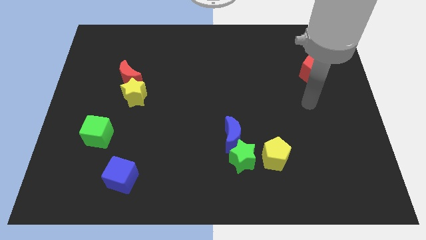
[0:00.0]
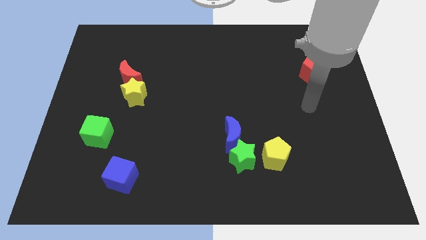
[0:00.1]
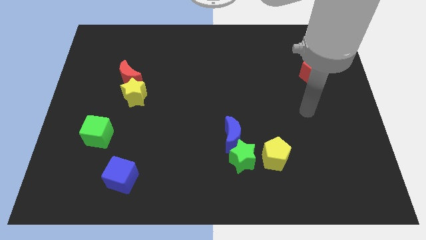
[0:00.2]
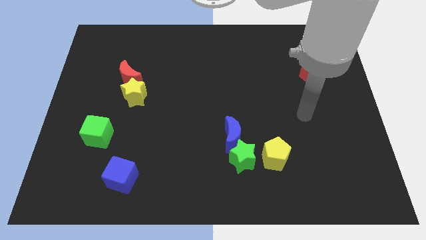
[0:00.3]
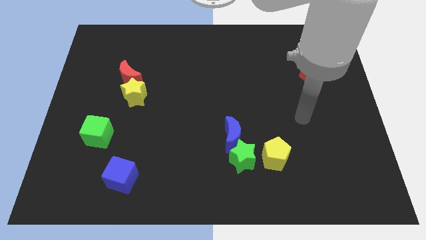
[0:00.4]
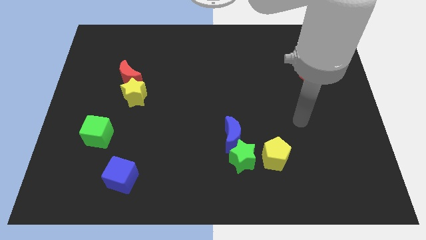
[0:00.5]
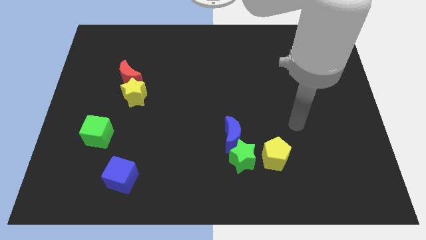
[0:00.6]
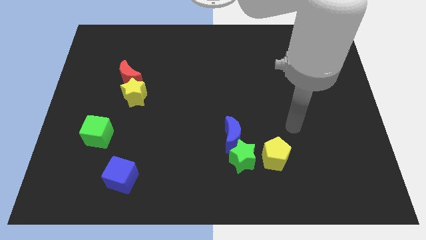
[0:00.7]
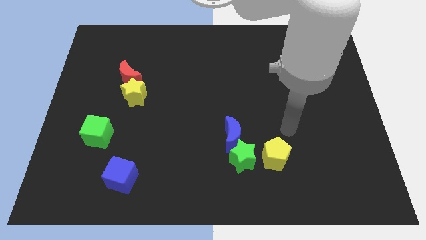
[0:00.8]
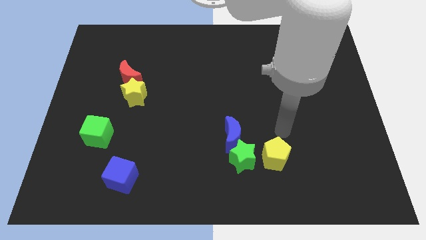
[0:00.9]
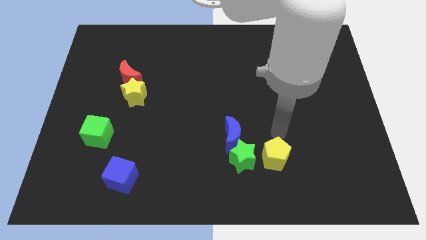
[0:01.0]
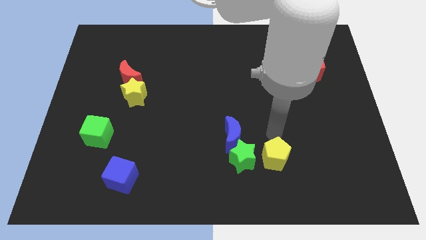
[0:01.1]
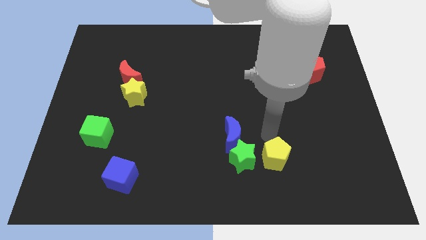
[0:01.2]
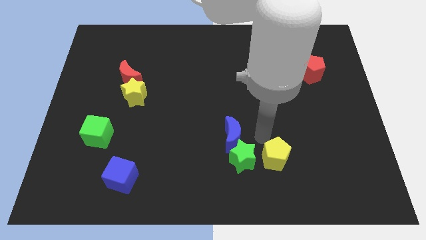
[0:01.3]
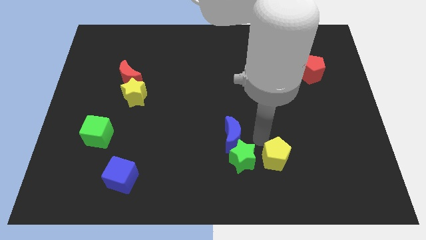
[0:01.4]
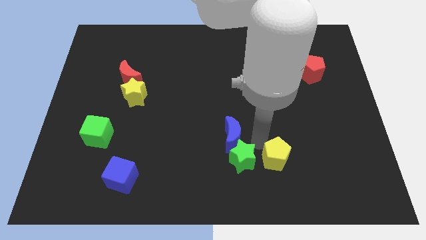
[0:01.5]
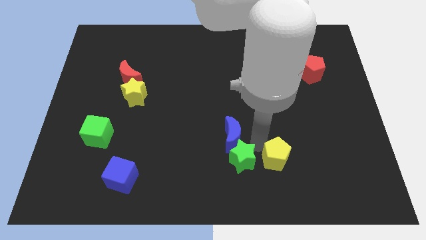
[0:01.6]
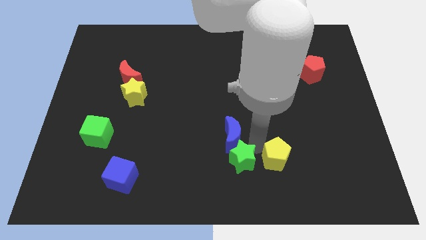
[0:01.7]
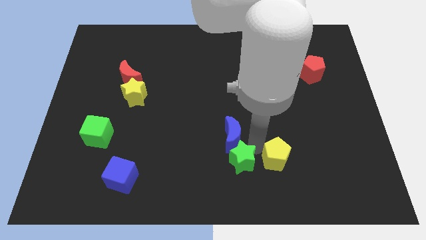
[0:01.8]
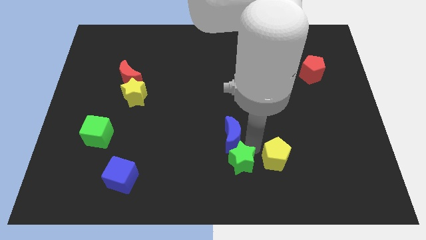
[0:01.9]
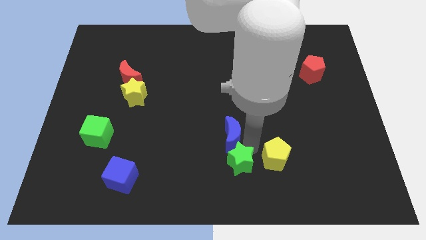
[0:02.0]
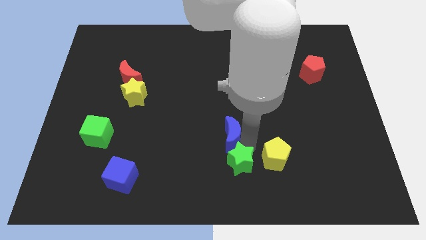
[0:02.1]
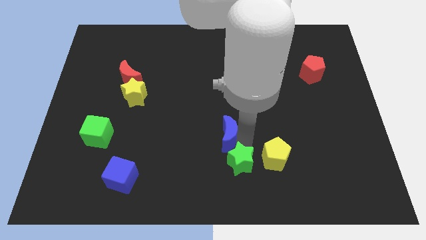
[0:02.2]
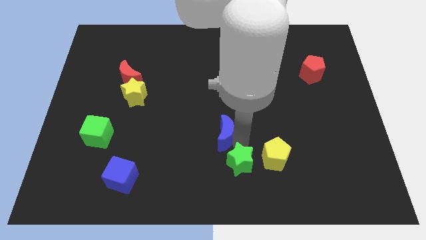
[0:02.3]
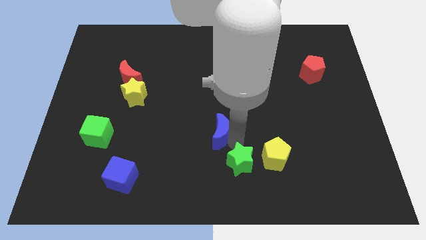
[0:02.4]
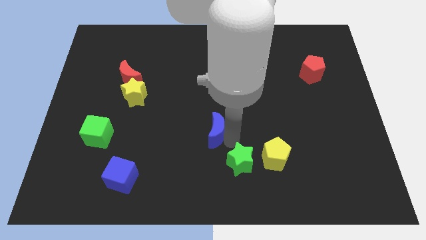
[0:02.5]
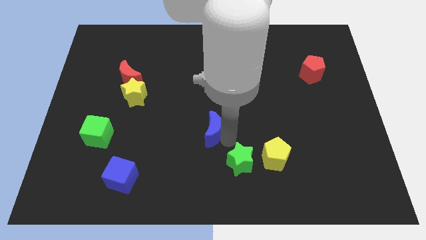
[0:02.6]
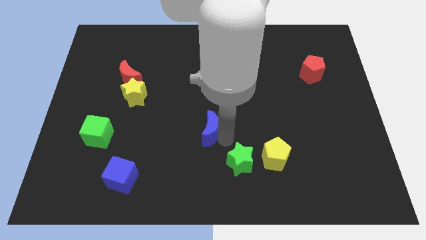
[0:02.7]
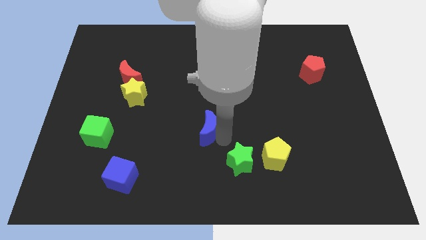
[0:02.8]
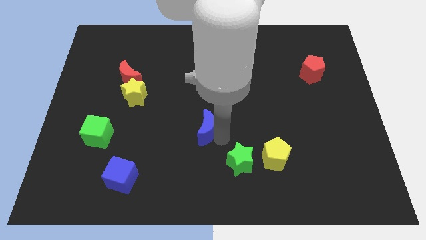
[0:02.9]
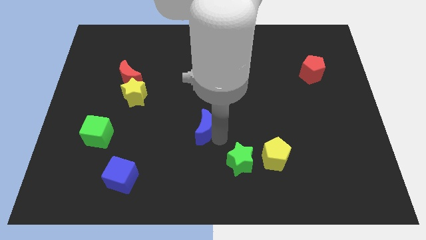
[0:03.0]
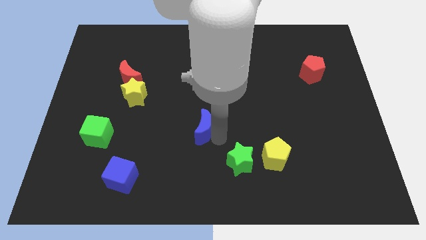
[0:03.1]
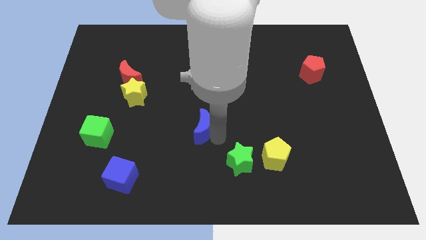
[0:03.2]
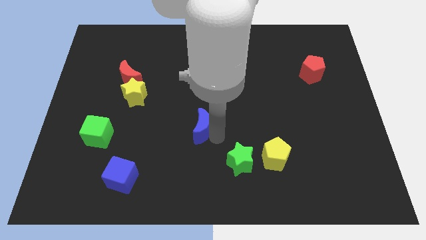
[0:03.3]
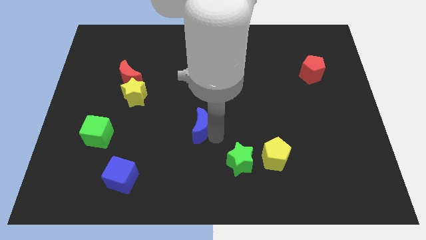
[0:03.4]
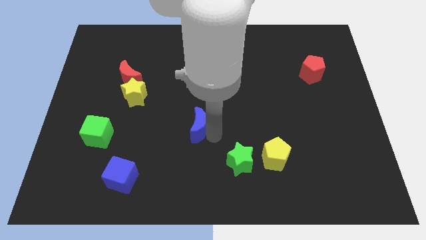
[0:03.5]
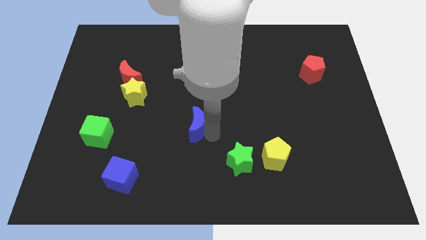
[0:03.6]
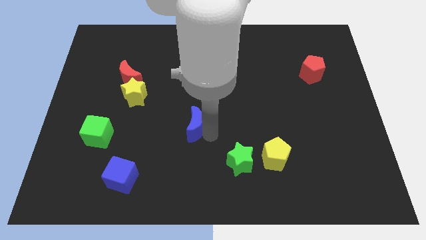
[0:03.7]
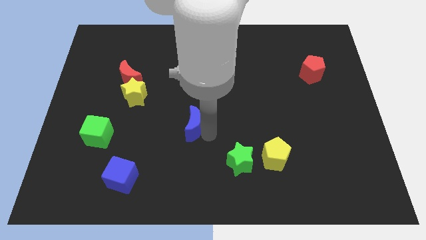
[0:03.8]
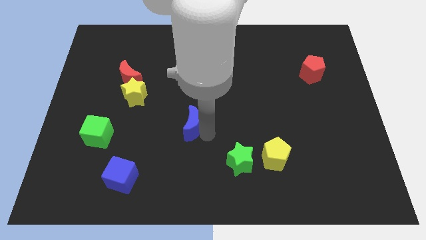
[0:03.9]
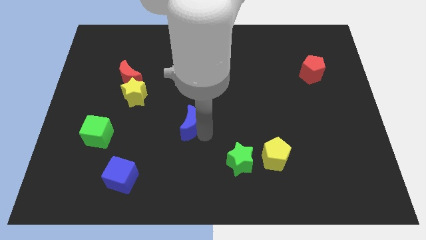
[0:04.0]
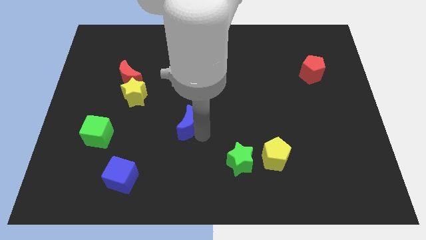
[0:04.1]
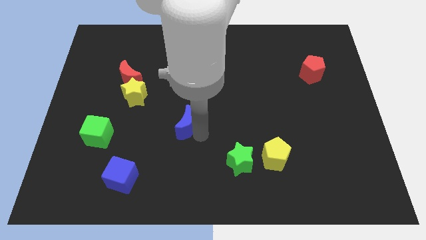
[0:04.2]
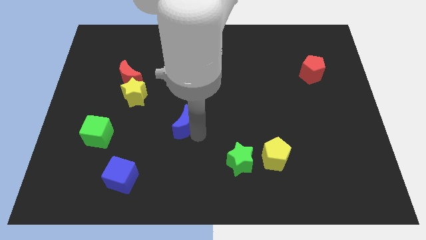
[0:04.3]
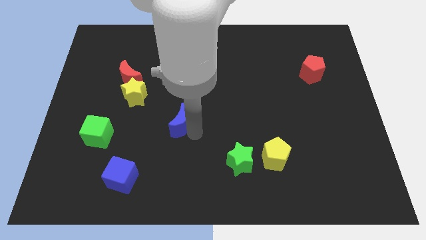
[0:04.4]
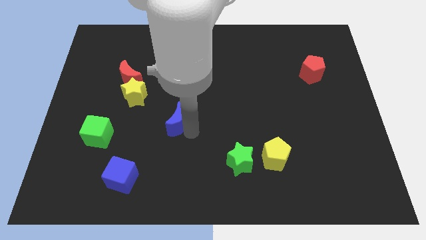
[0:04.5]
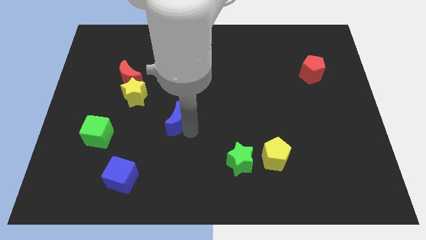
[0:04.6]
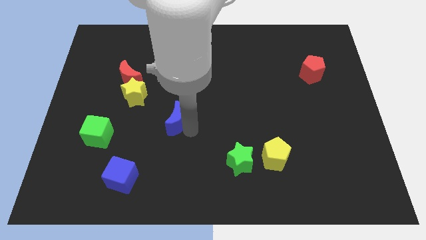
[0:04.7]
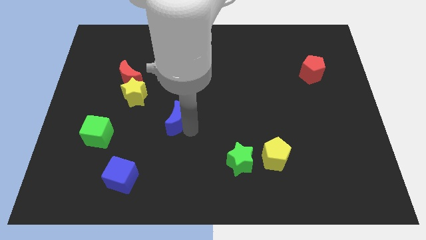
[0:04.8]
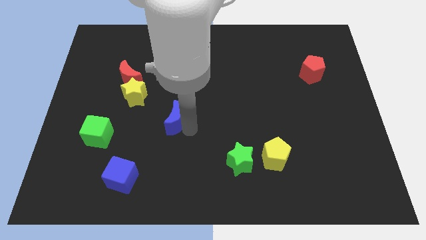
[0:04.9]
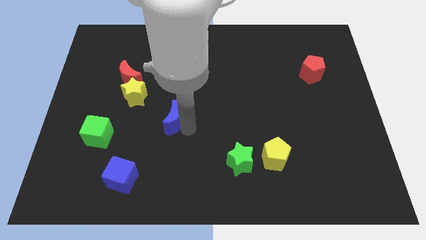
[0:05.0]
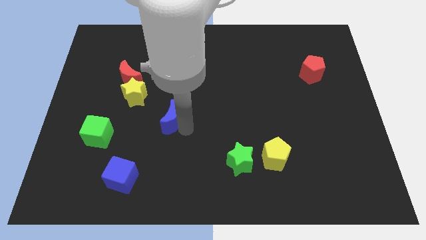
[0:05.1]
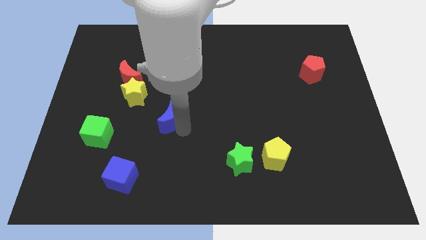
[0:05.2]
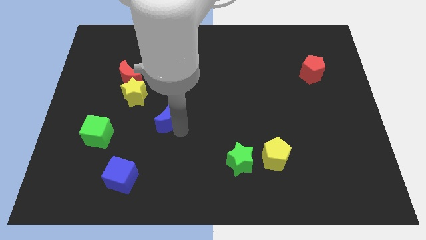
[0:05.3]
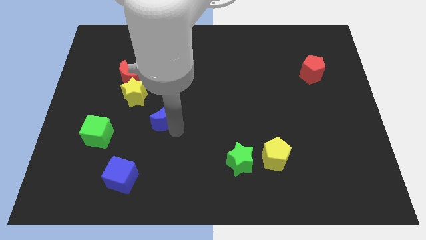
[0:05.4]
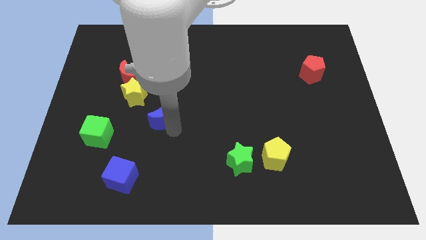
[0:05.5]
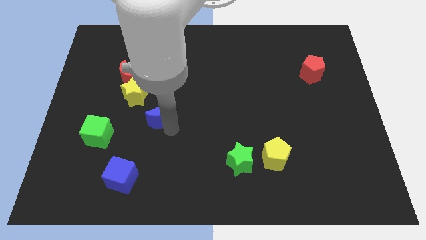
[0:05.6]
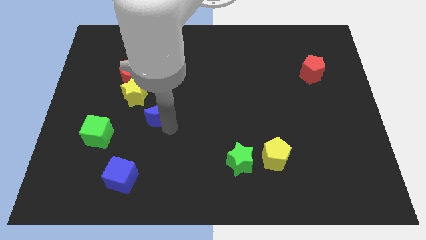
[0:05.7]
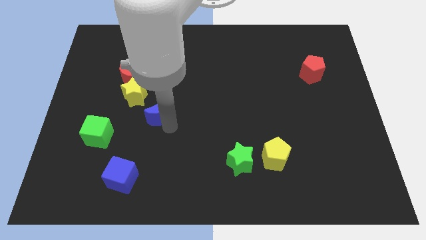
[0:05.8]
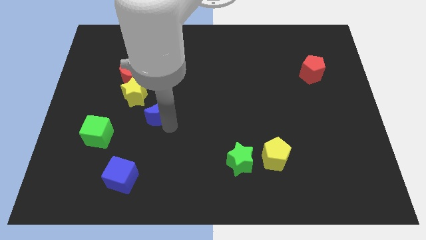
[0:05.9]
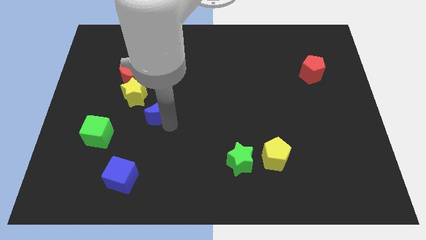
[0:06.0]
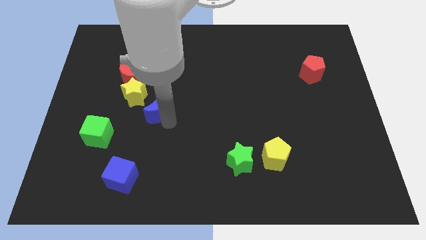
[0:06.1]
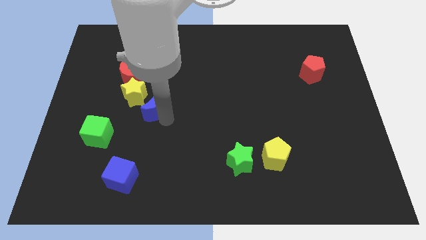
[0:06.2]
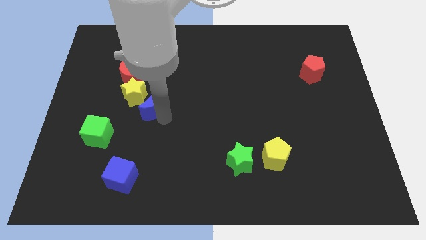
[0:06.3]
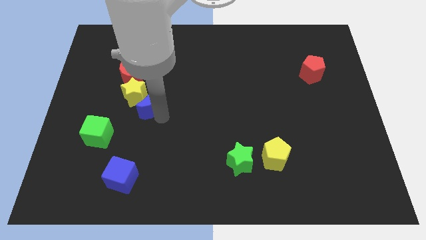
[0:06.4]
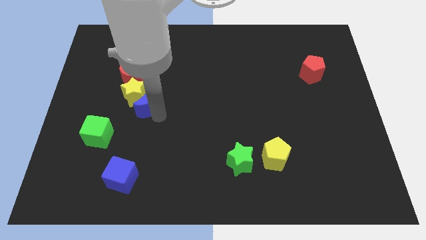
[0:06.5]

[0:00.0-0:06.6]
slide the blue moon towards the yellow star

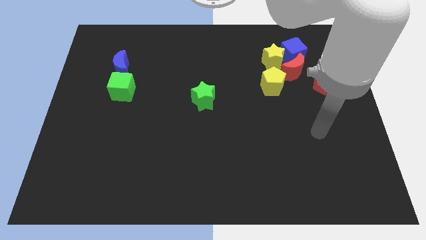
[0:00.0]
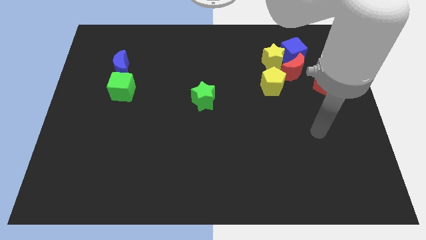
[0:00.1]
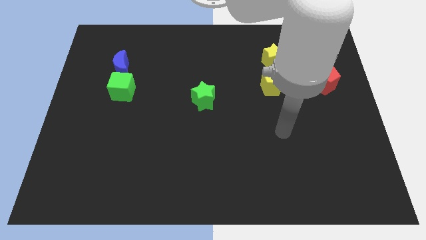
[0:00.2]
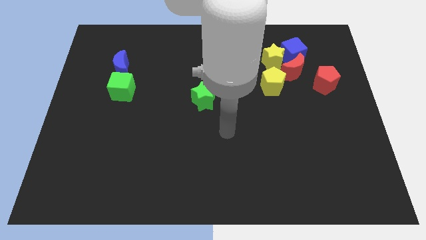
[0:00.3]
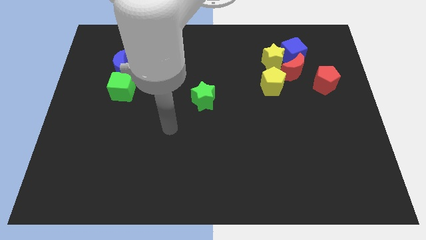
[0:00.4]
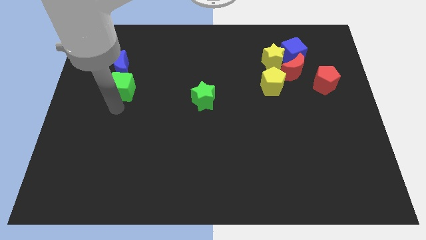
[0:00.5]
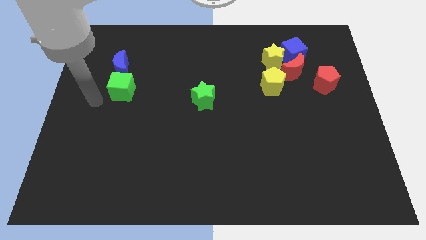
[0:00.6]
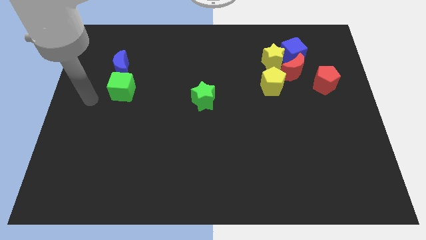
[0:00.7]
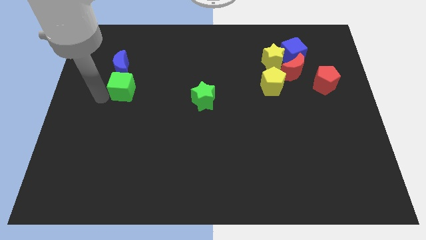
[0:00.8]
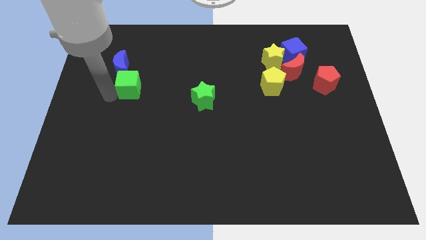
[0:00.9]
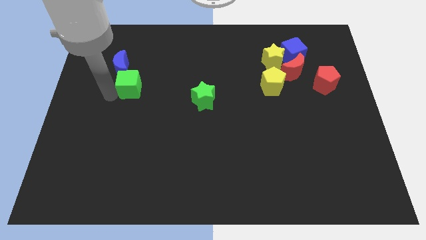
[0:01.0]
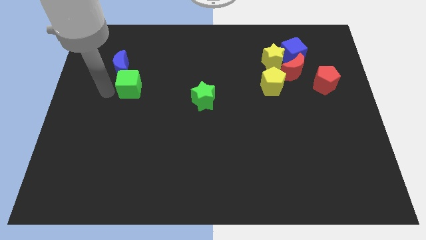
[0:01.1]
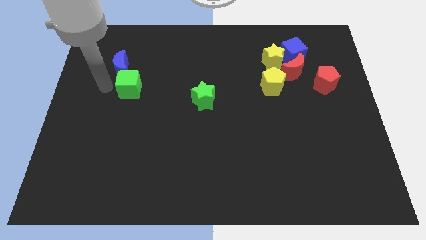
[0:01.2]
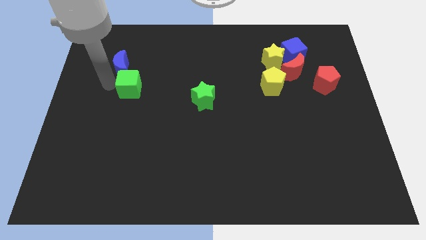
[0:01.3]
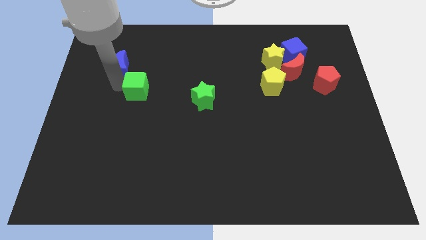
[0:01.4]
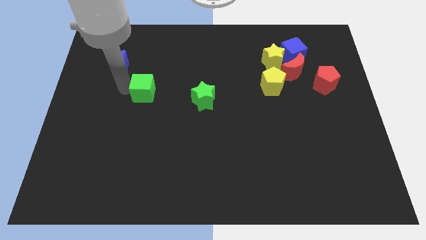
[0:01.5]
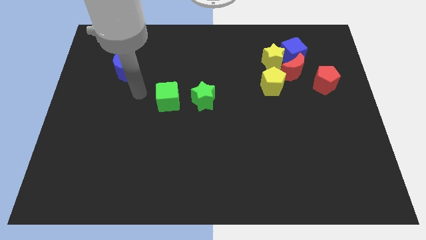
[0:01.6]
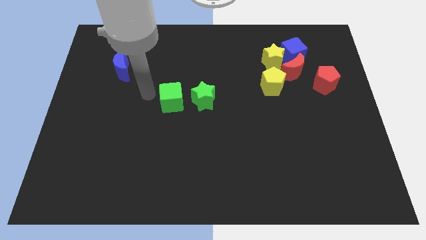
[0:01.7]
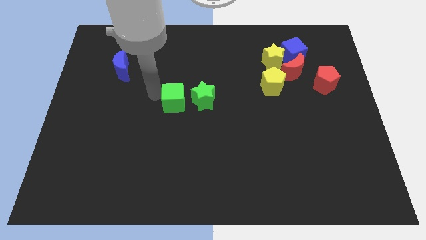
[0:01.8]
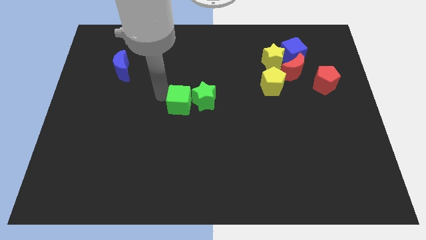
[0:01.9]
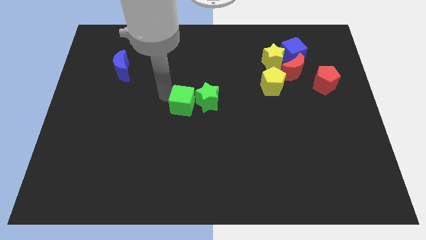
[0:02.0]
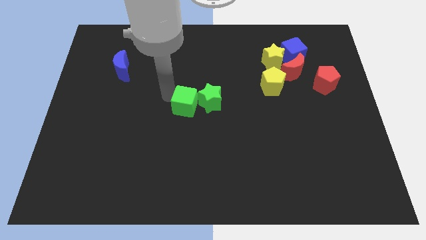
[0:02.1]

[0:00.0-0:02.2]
move the green cube close to the green star
